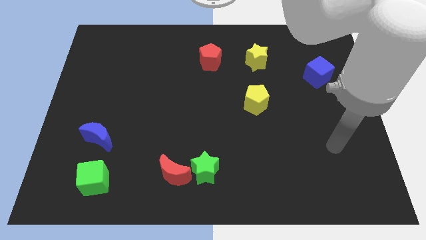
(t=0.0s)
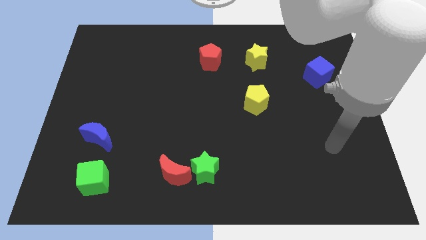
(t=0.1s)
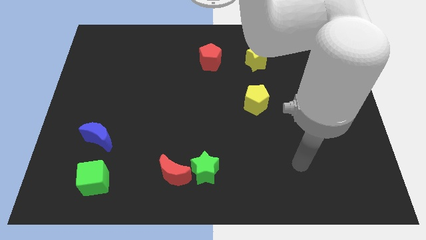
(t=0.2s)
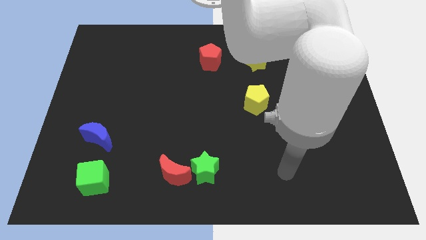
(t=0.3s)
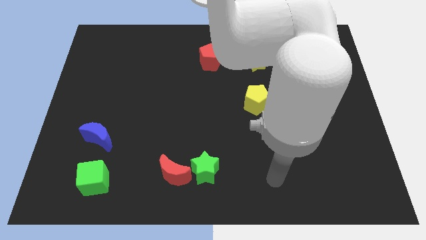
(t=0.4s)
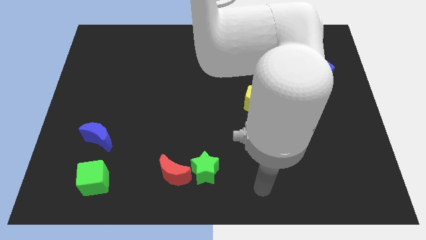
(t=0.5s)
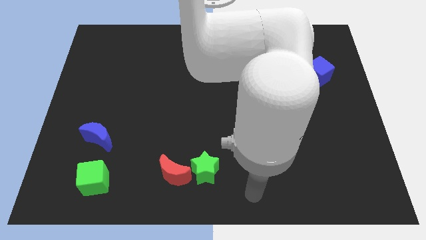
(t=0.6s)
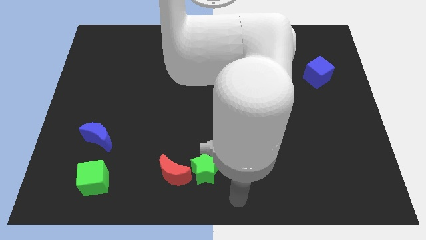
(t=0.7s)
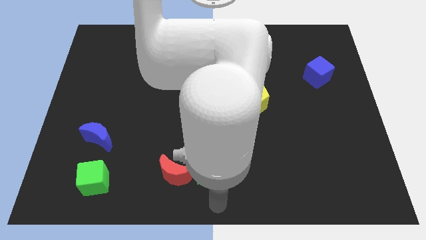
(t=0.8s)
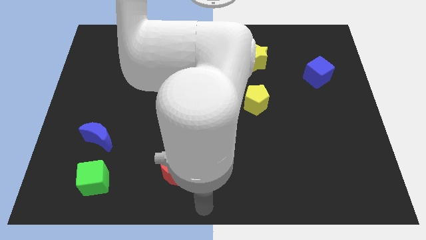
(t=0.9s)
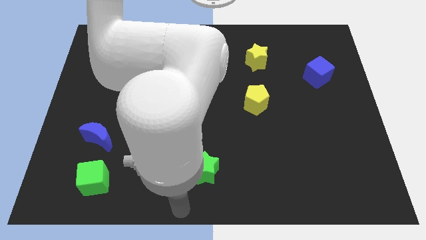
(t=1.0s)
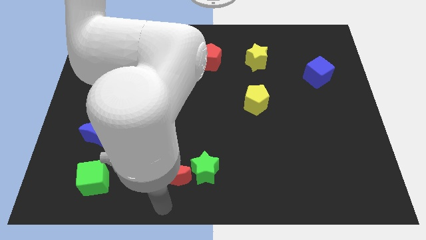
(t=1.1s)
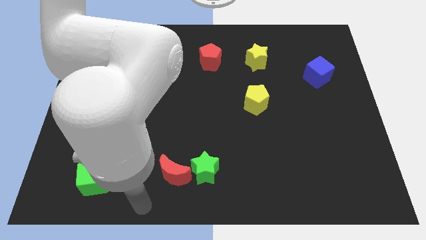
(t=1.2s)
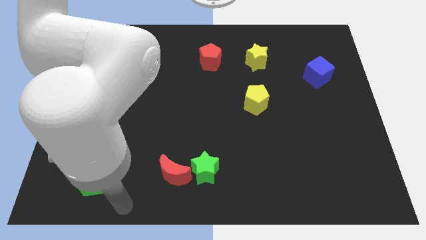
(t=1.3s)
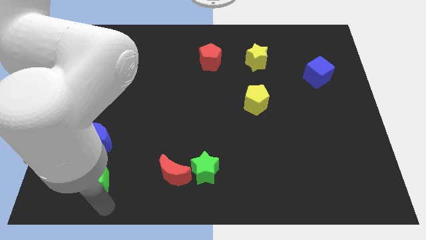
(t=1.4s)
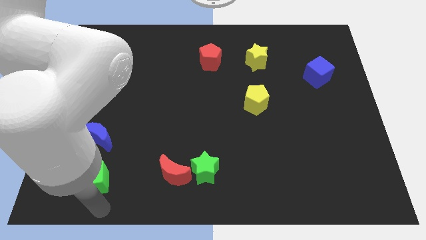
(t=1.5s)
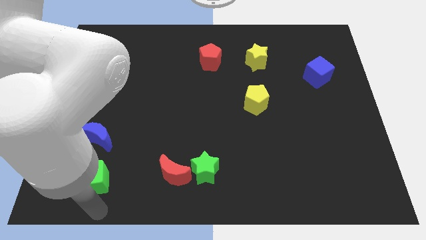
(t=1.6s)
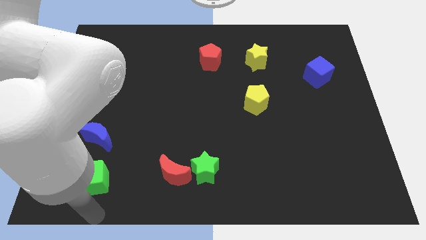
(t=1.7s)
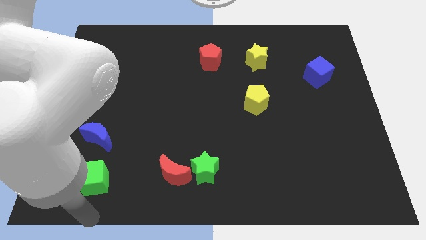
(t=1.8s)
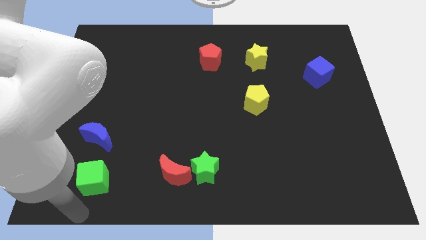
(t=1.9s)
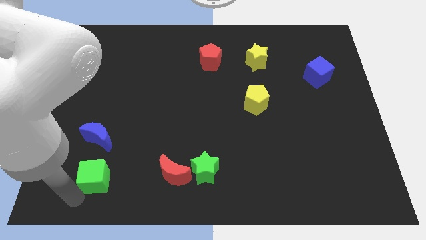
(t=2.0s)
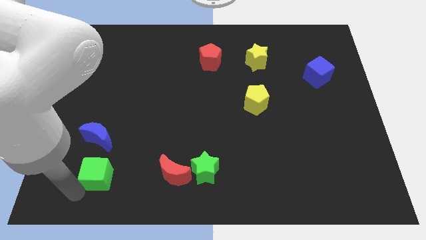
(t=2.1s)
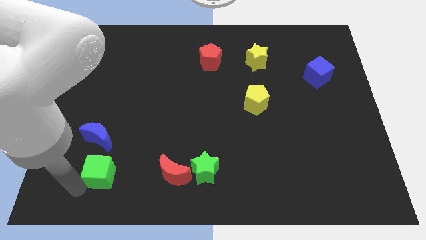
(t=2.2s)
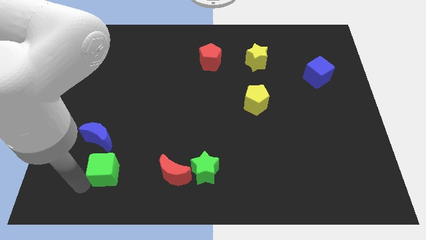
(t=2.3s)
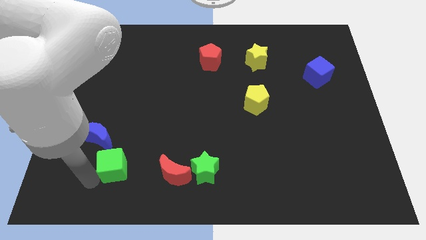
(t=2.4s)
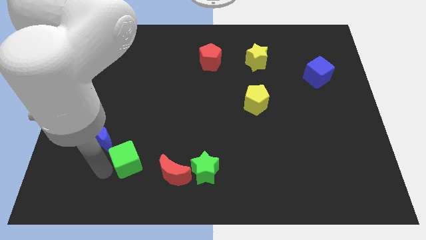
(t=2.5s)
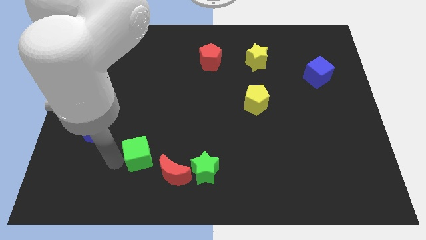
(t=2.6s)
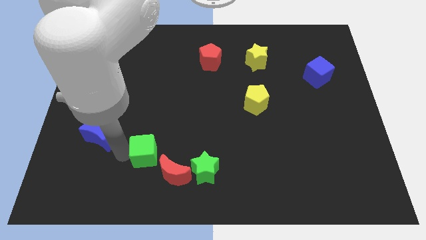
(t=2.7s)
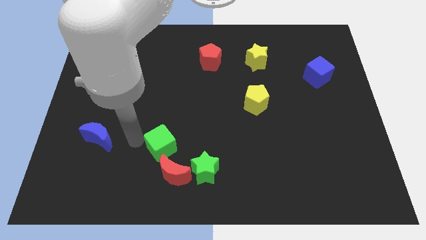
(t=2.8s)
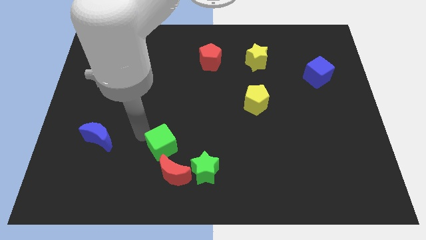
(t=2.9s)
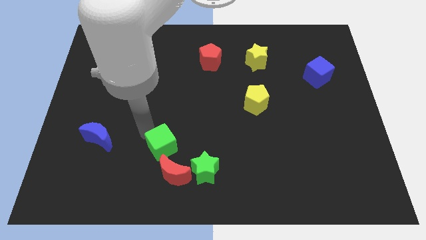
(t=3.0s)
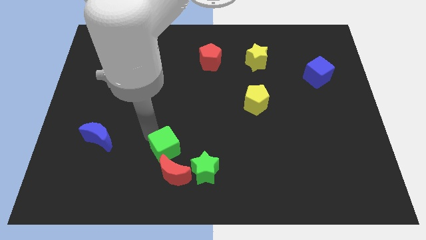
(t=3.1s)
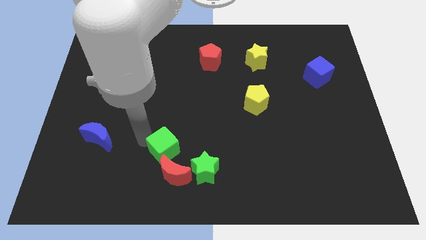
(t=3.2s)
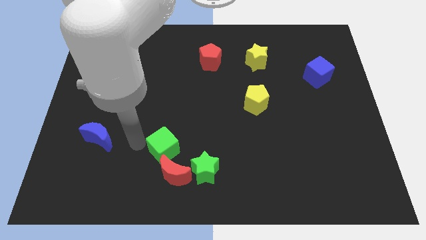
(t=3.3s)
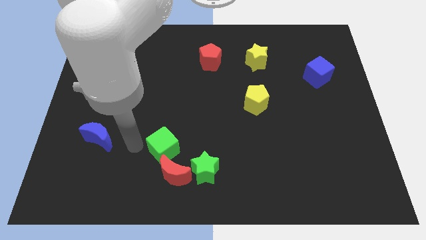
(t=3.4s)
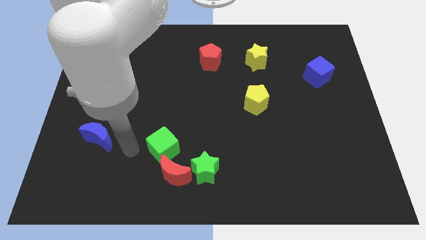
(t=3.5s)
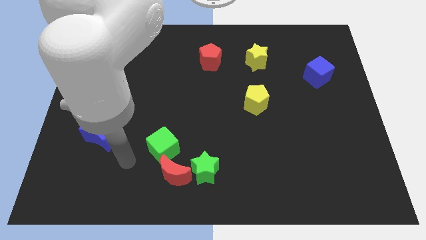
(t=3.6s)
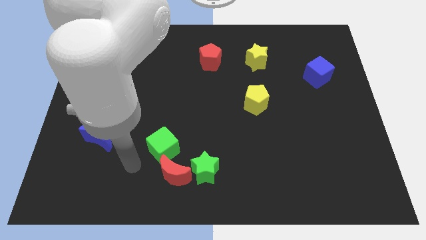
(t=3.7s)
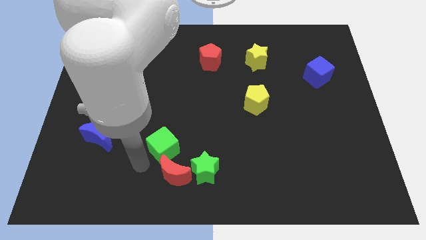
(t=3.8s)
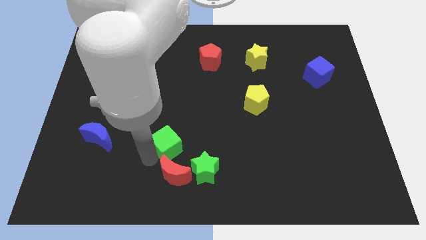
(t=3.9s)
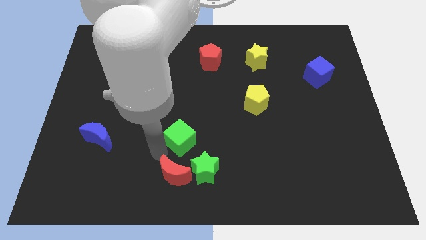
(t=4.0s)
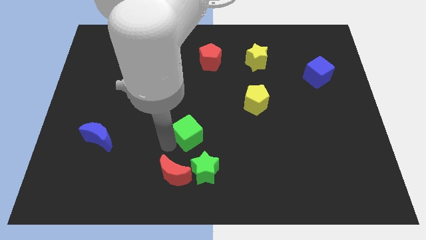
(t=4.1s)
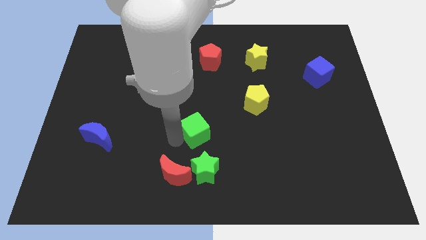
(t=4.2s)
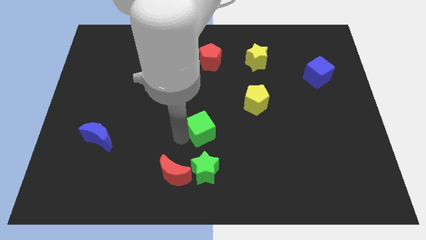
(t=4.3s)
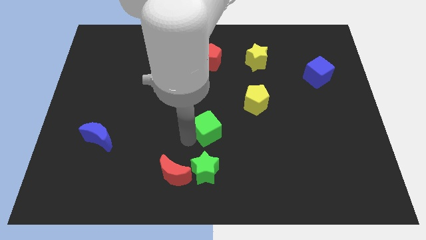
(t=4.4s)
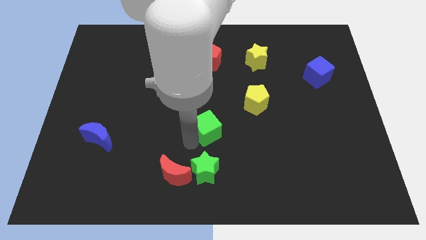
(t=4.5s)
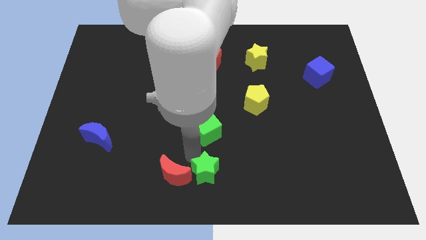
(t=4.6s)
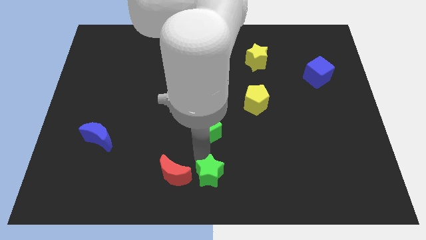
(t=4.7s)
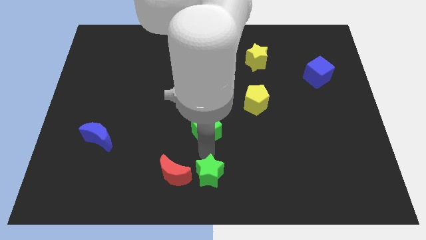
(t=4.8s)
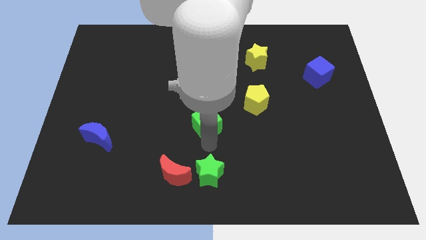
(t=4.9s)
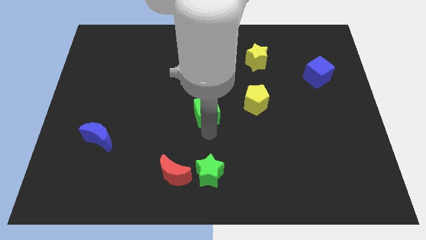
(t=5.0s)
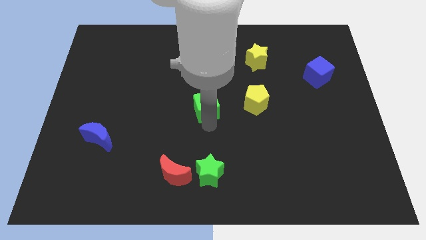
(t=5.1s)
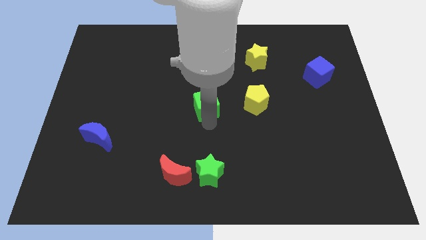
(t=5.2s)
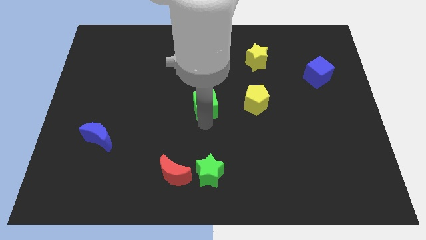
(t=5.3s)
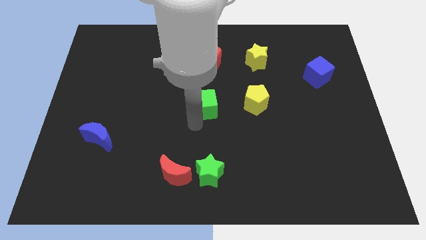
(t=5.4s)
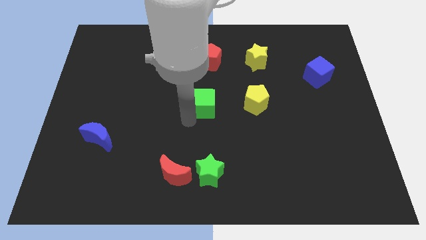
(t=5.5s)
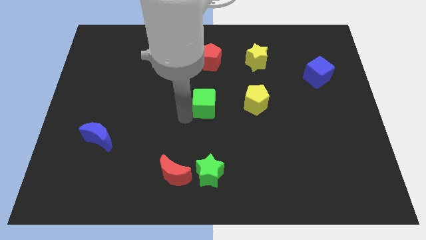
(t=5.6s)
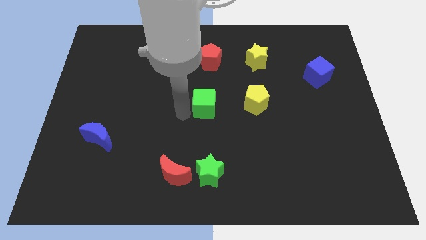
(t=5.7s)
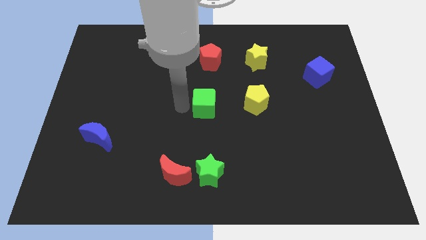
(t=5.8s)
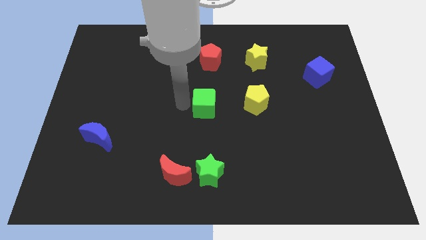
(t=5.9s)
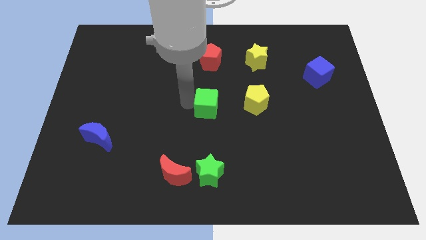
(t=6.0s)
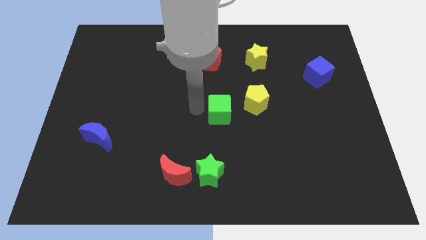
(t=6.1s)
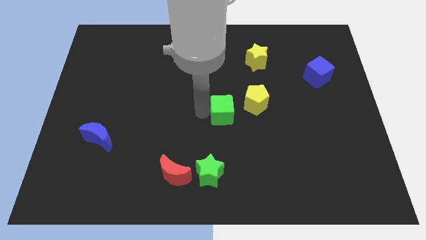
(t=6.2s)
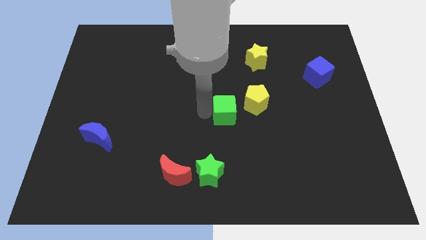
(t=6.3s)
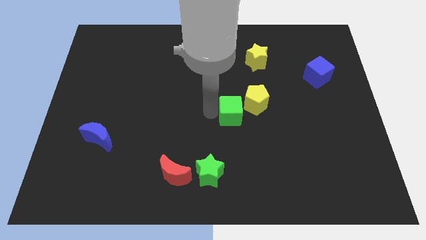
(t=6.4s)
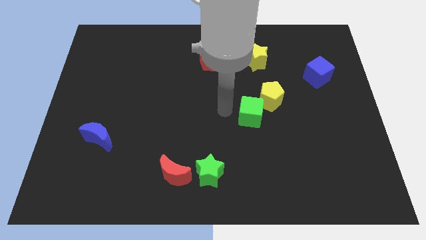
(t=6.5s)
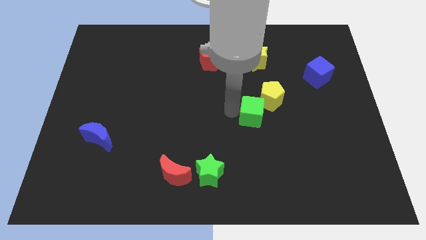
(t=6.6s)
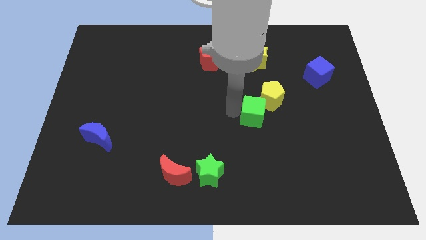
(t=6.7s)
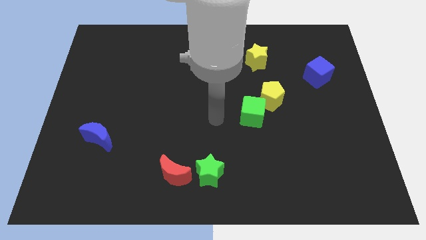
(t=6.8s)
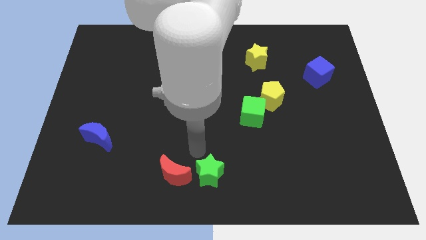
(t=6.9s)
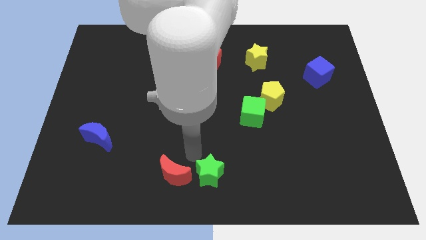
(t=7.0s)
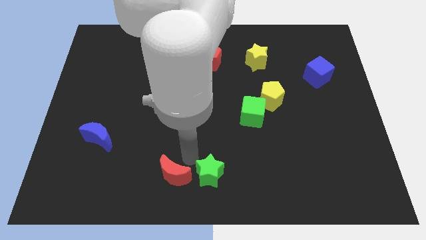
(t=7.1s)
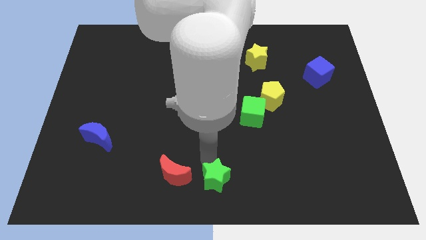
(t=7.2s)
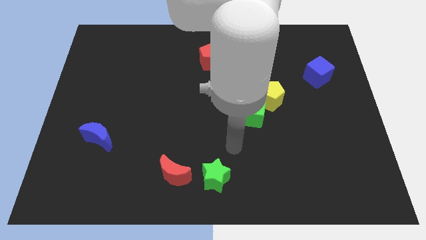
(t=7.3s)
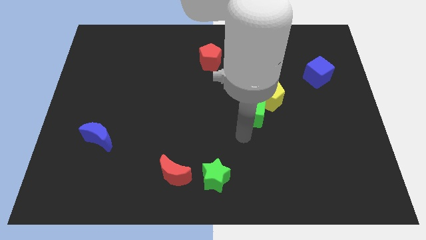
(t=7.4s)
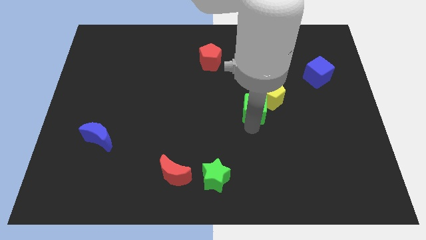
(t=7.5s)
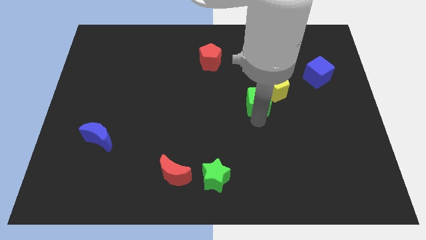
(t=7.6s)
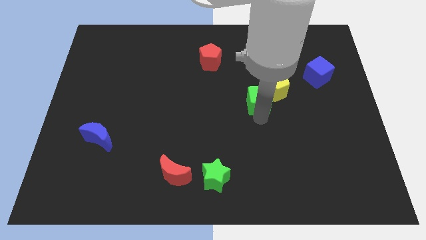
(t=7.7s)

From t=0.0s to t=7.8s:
push the green cube next to the yellow pentagon

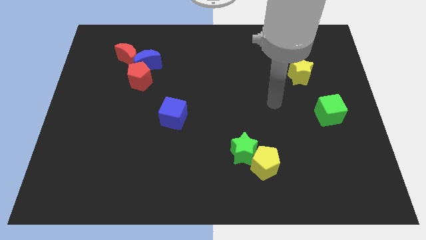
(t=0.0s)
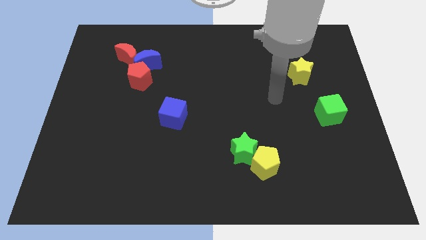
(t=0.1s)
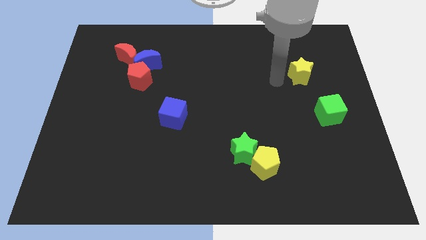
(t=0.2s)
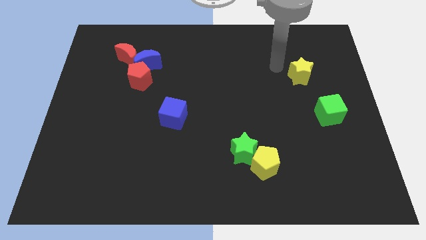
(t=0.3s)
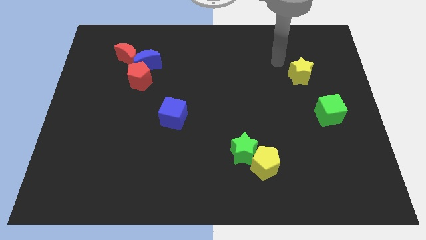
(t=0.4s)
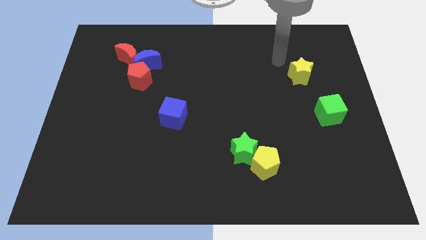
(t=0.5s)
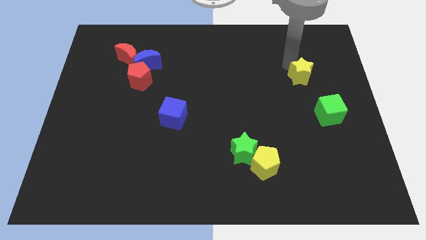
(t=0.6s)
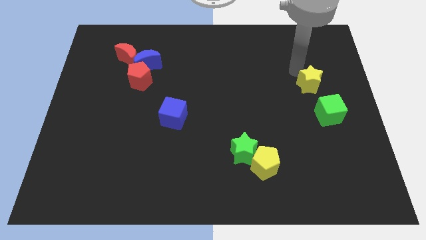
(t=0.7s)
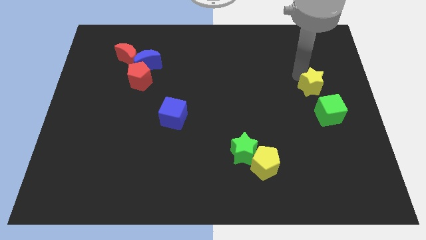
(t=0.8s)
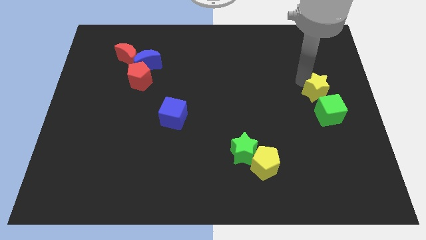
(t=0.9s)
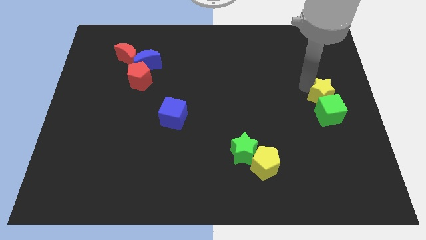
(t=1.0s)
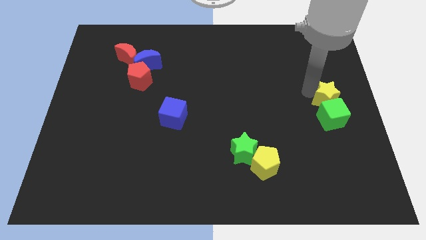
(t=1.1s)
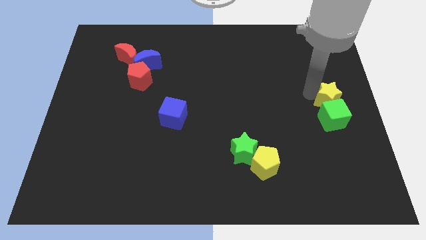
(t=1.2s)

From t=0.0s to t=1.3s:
put the yellow star next to the green cube
